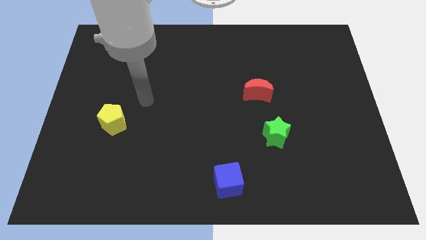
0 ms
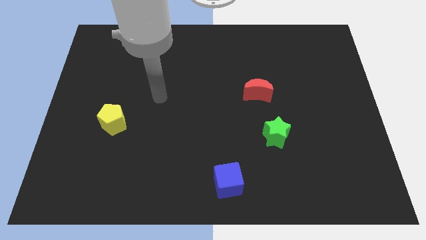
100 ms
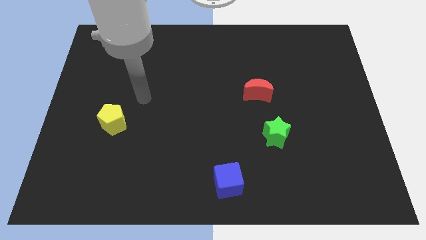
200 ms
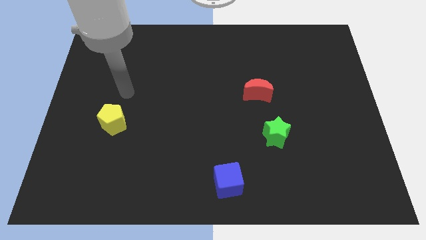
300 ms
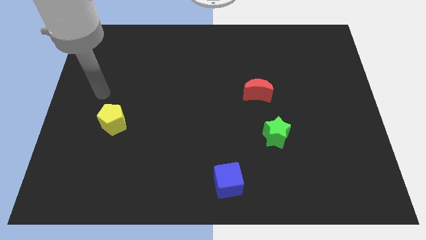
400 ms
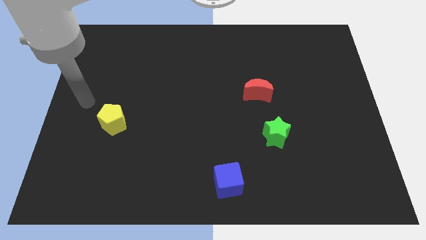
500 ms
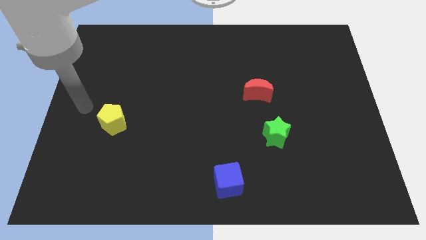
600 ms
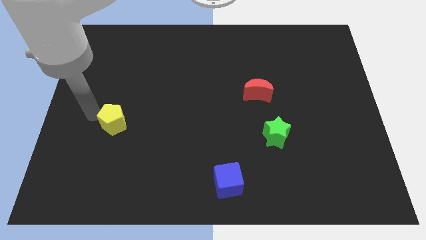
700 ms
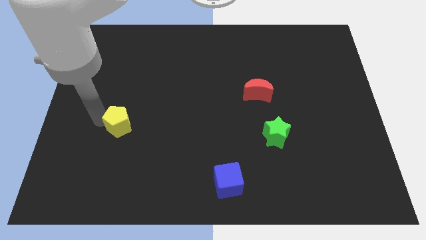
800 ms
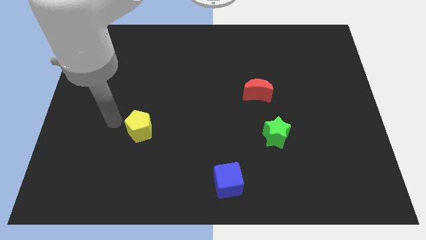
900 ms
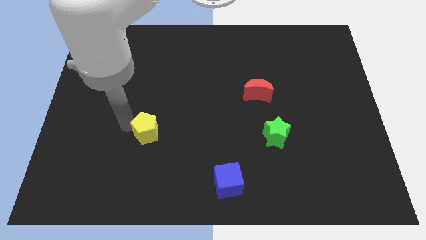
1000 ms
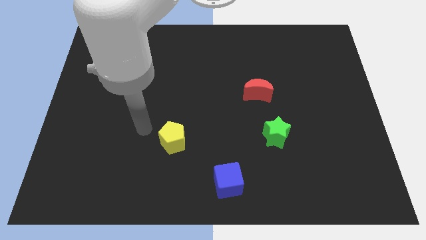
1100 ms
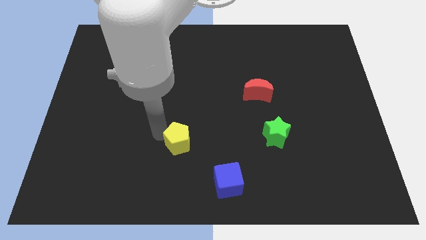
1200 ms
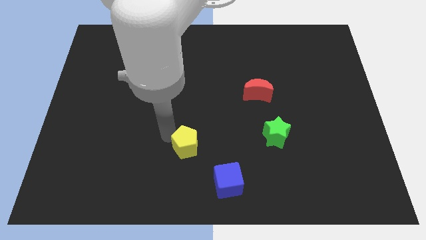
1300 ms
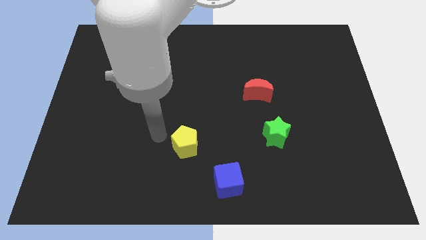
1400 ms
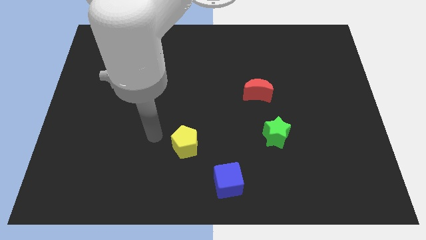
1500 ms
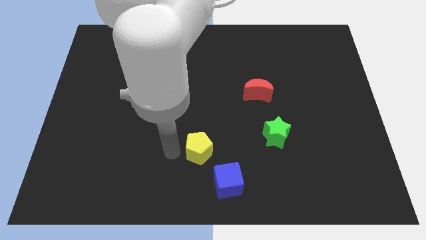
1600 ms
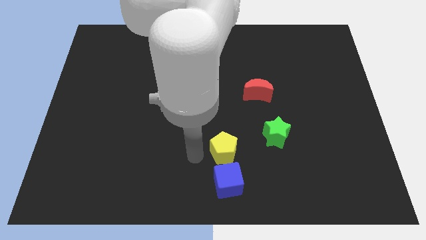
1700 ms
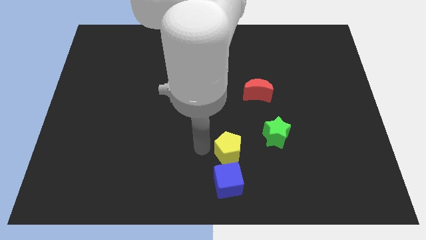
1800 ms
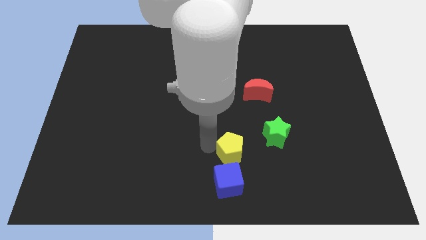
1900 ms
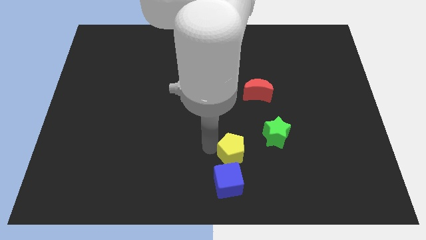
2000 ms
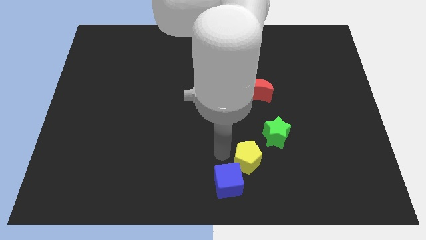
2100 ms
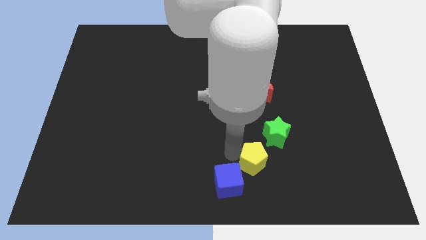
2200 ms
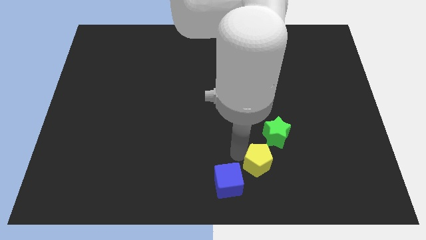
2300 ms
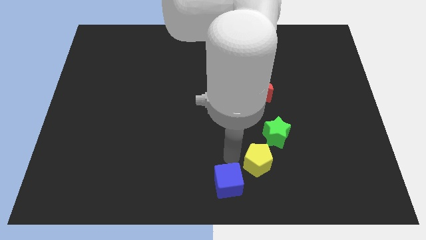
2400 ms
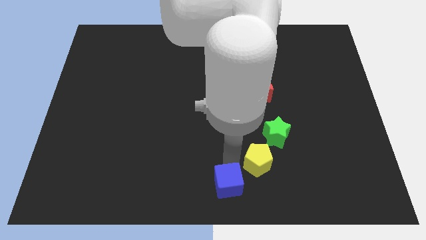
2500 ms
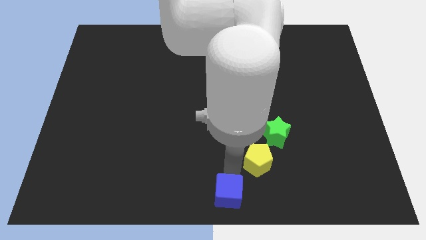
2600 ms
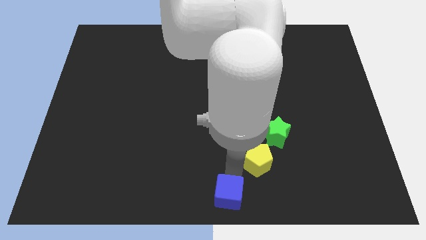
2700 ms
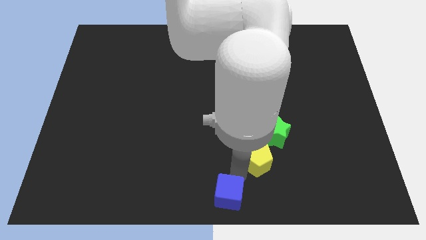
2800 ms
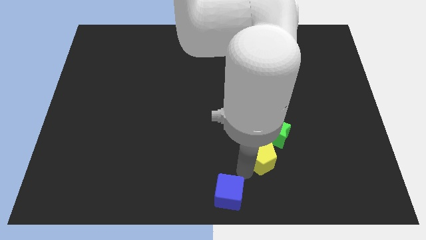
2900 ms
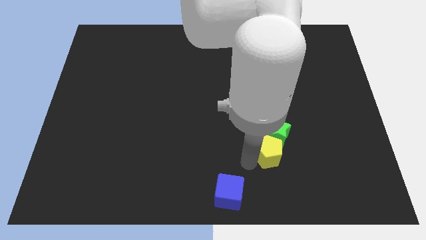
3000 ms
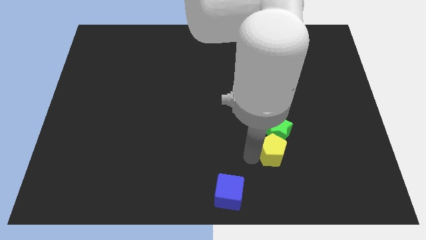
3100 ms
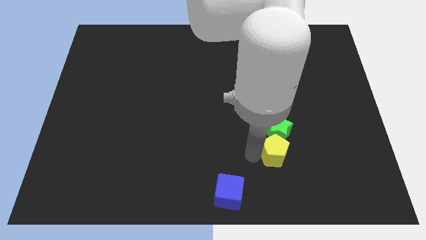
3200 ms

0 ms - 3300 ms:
slide the yellow block towards the star

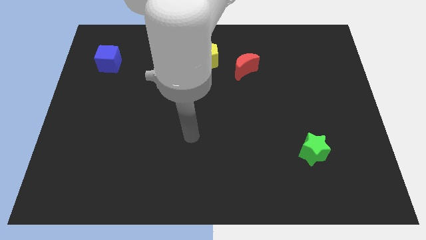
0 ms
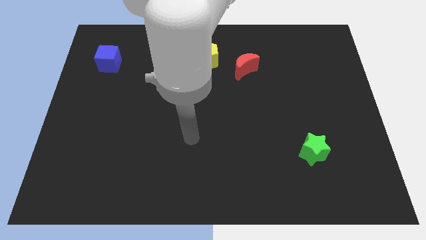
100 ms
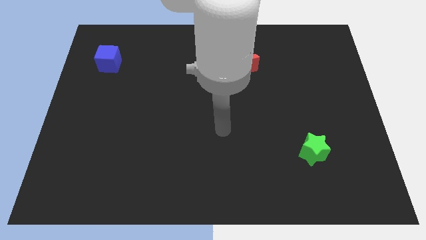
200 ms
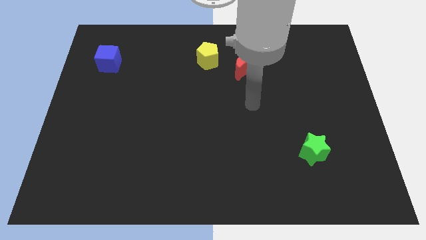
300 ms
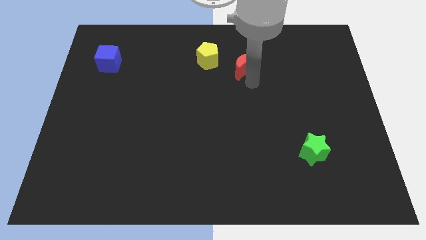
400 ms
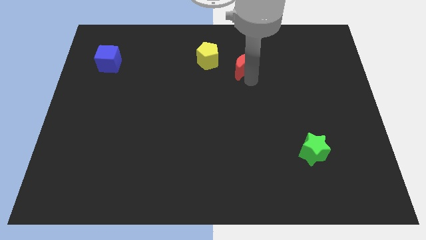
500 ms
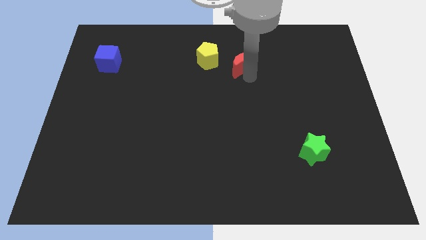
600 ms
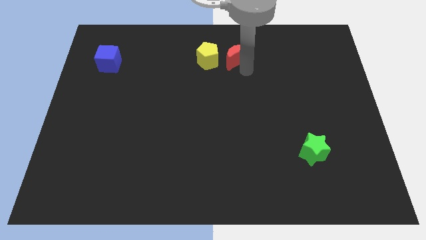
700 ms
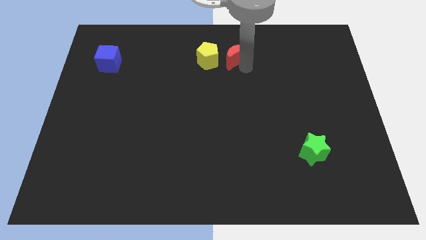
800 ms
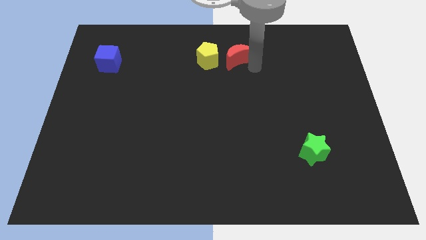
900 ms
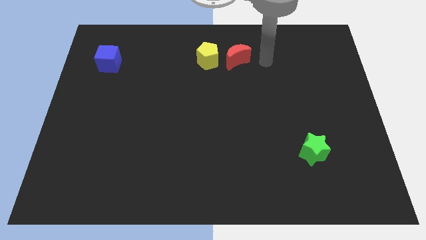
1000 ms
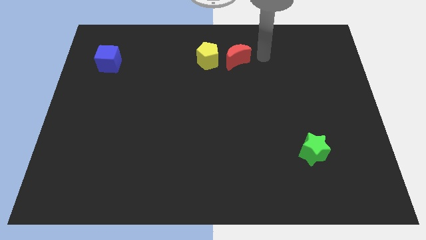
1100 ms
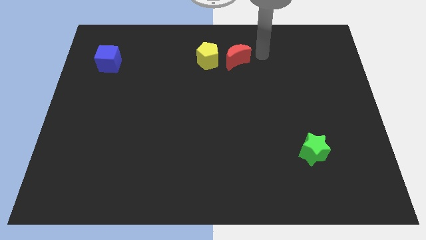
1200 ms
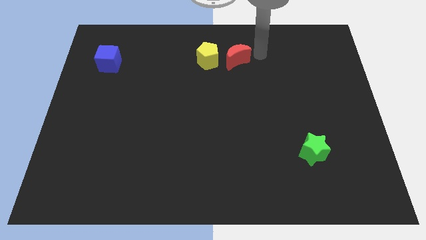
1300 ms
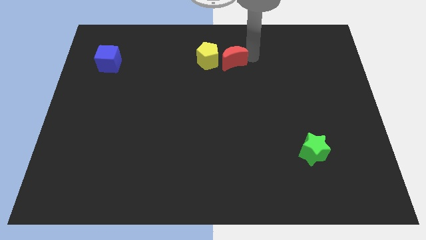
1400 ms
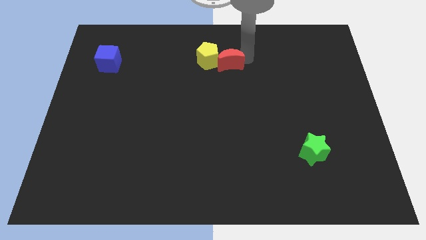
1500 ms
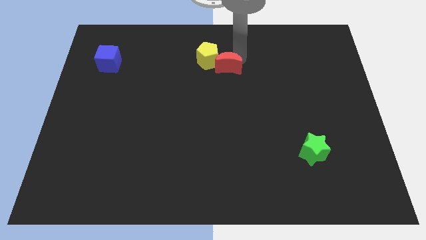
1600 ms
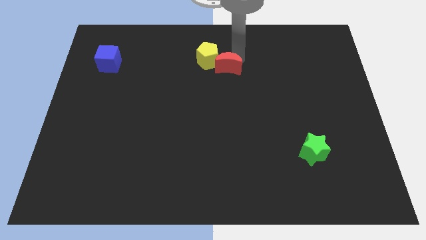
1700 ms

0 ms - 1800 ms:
slide the moon next to the yellow block

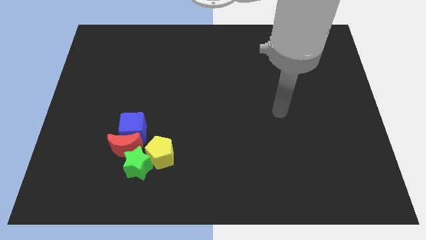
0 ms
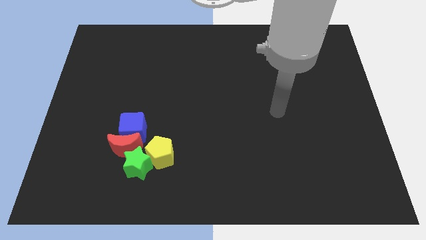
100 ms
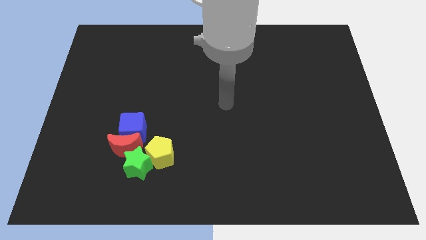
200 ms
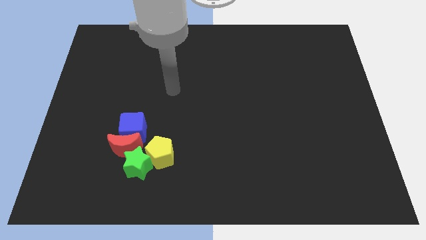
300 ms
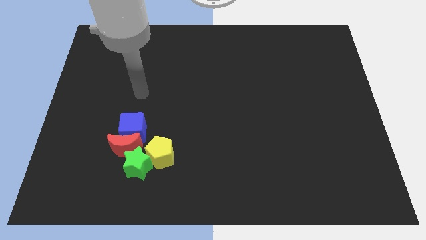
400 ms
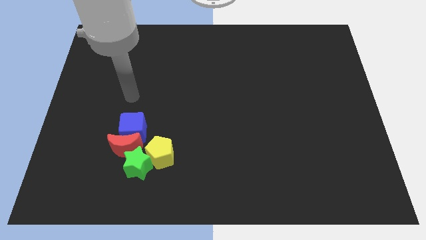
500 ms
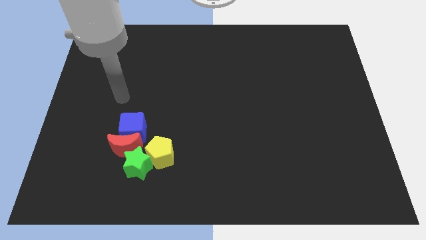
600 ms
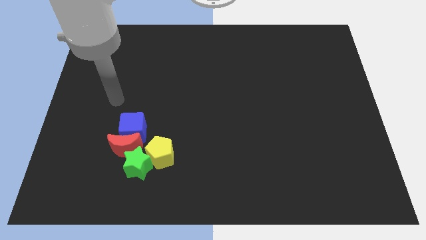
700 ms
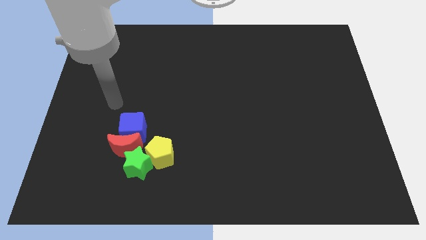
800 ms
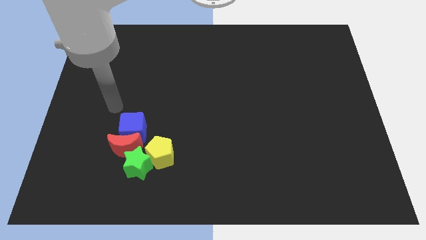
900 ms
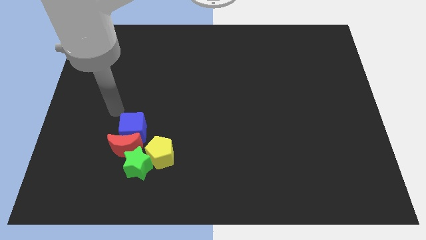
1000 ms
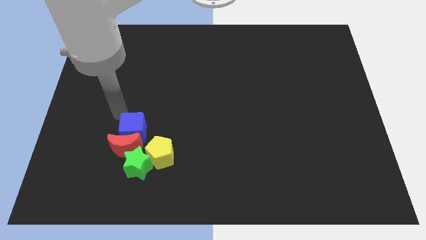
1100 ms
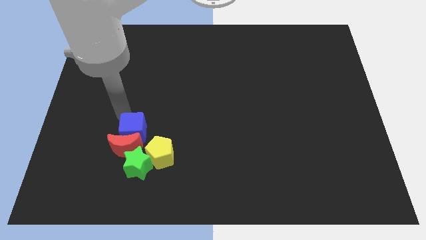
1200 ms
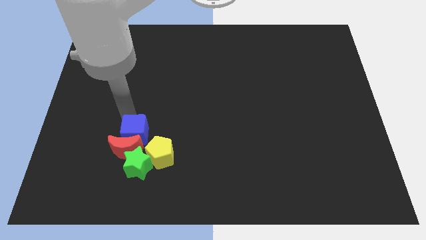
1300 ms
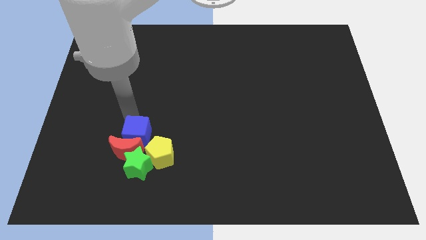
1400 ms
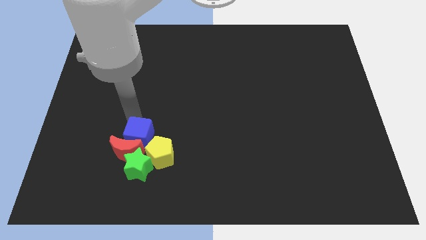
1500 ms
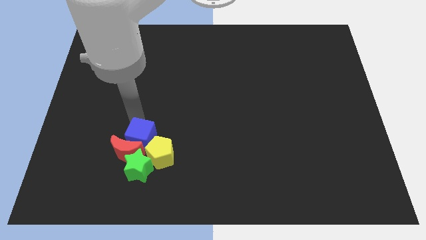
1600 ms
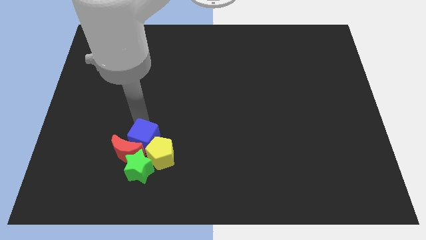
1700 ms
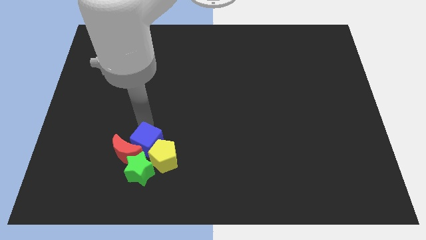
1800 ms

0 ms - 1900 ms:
put the blue cube next to the pentagon

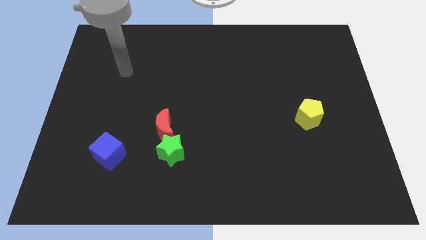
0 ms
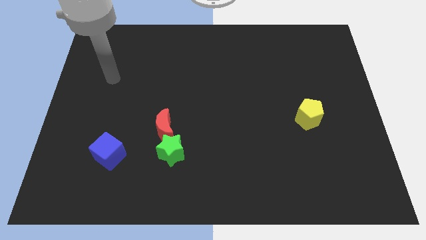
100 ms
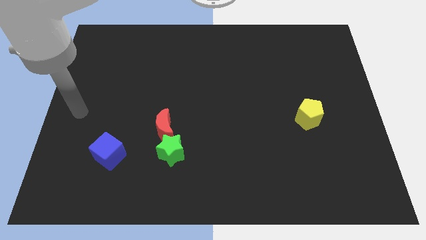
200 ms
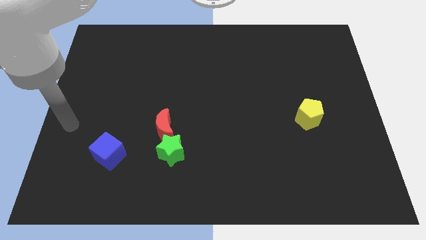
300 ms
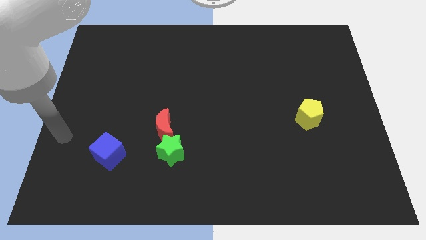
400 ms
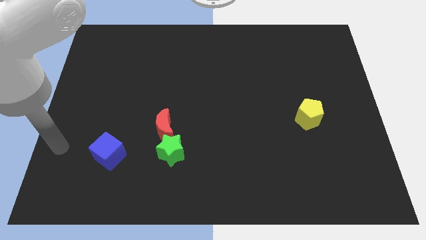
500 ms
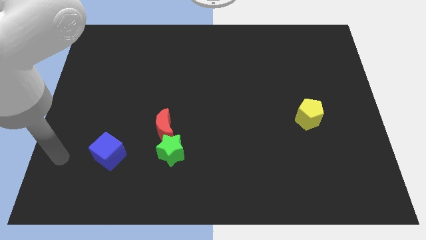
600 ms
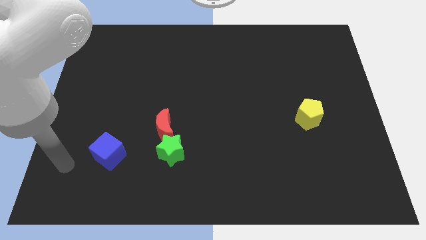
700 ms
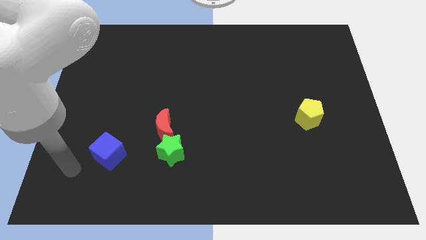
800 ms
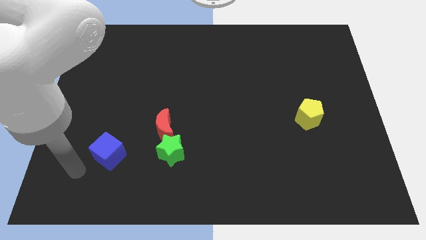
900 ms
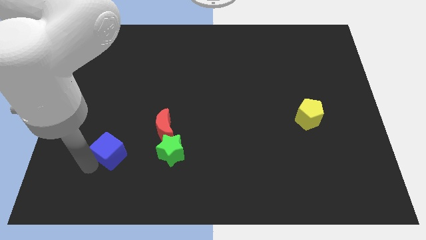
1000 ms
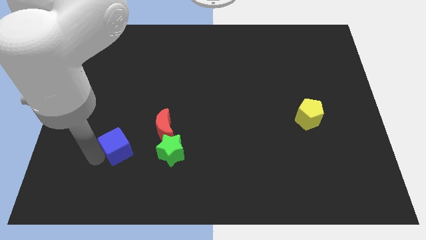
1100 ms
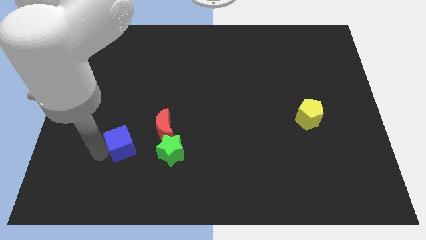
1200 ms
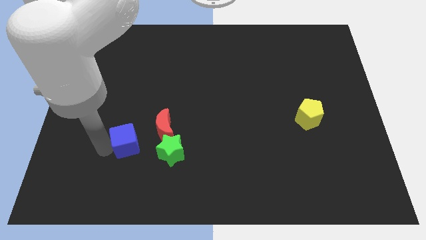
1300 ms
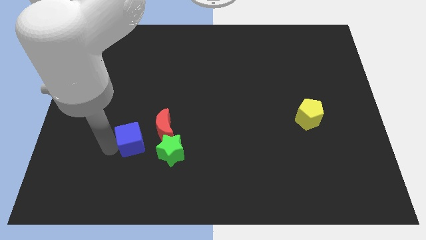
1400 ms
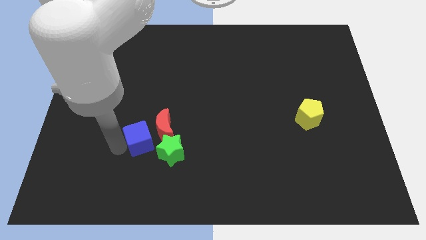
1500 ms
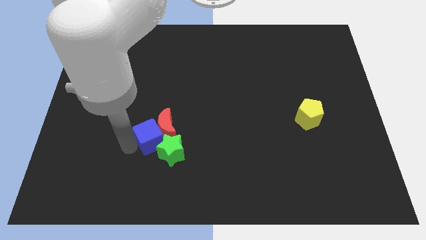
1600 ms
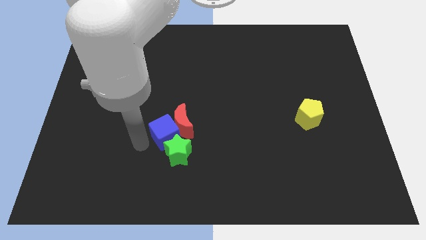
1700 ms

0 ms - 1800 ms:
slide the blue cube close to the moon
